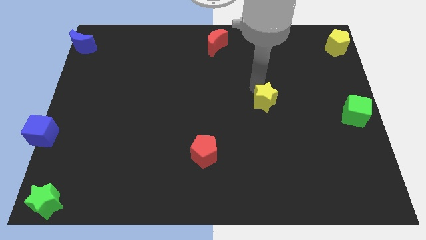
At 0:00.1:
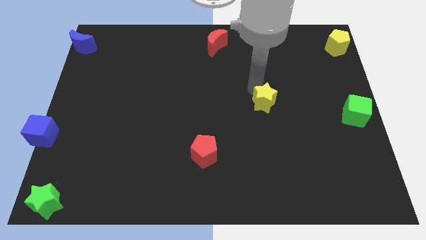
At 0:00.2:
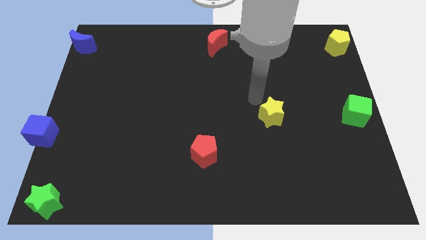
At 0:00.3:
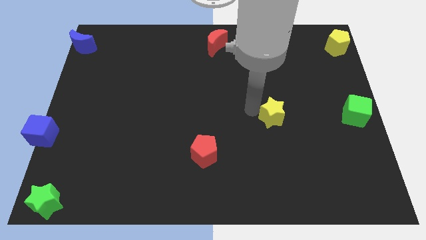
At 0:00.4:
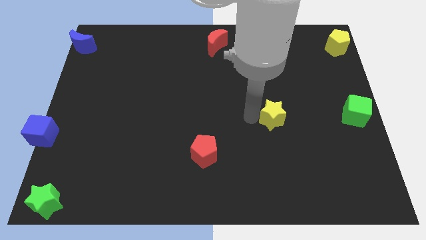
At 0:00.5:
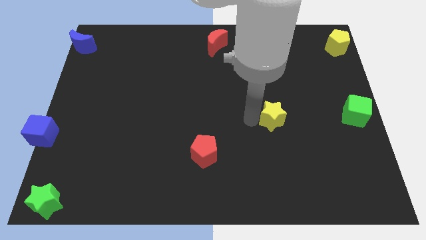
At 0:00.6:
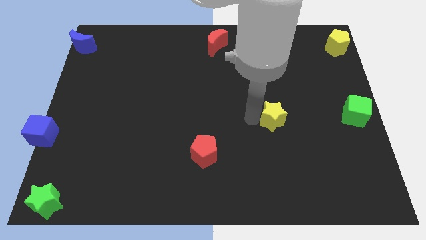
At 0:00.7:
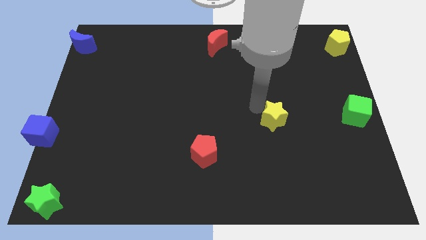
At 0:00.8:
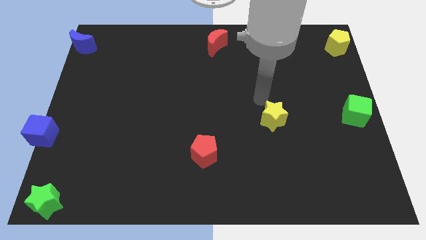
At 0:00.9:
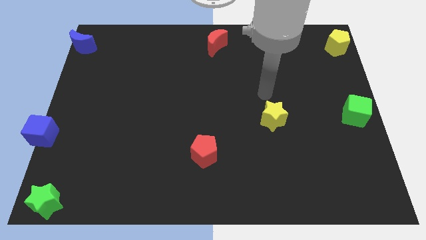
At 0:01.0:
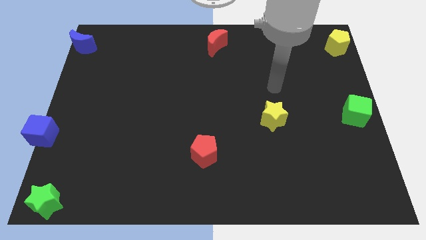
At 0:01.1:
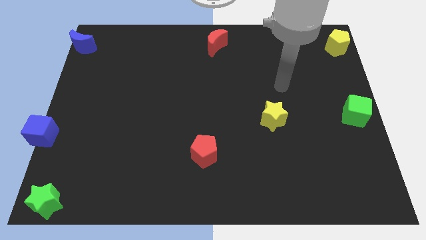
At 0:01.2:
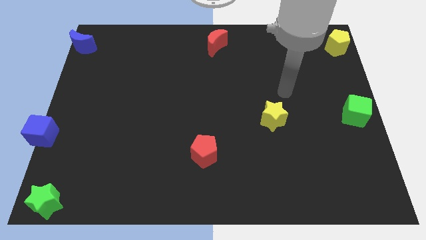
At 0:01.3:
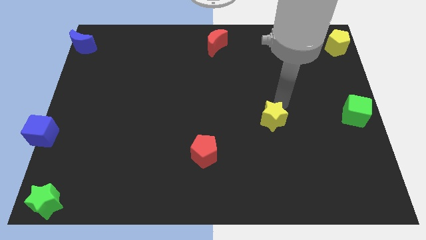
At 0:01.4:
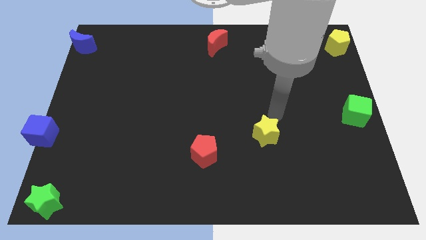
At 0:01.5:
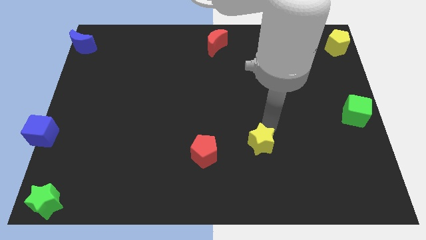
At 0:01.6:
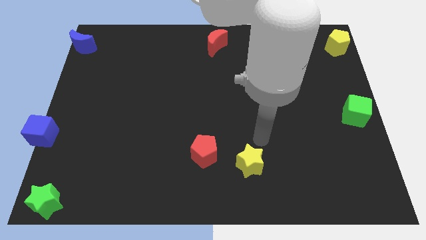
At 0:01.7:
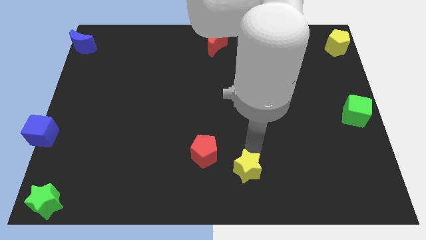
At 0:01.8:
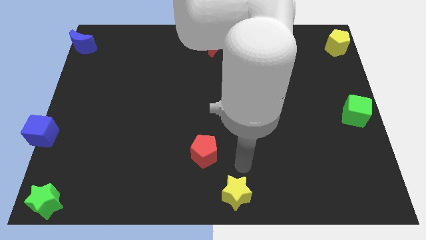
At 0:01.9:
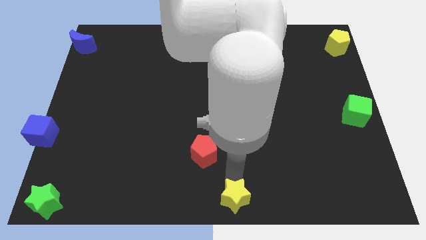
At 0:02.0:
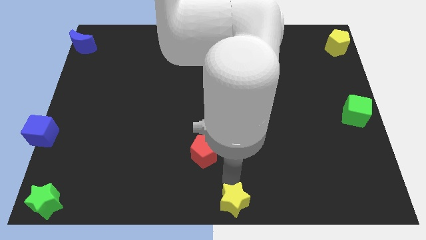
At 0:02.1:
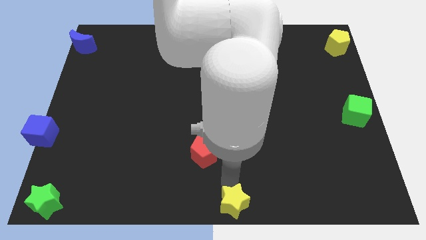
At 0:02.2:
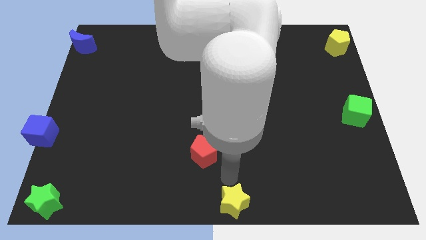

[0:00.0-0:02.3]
place the yellow star to the bottom center of the board

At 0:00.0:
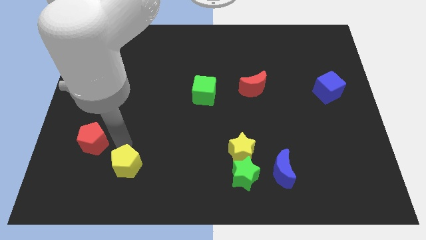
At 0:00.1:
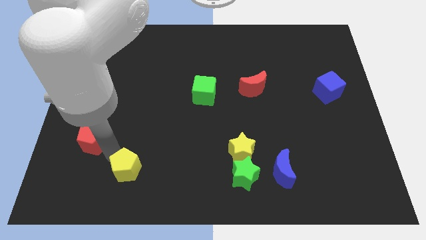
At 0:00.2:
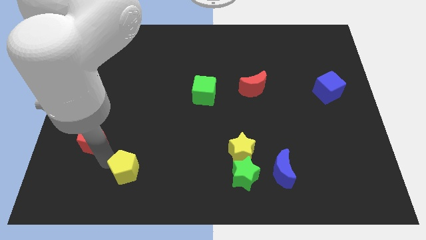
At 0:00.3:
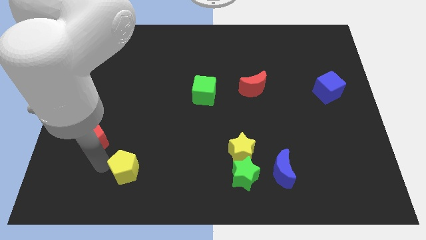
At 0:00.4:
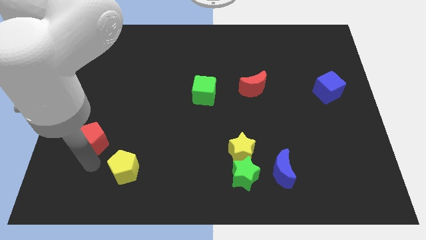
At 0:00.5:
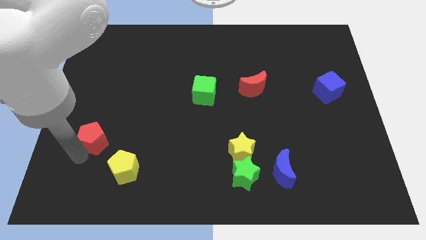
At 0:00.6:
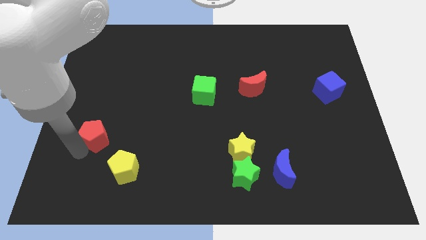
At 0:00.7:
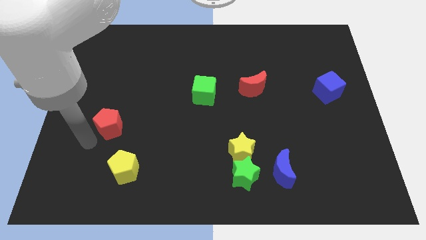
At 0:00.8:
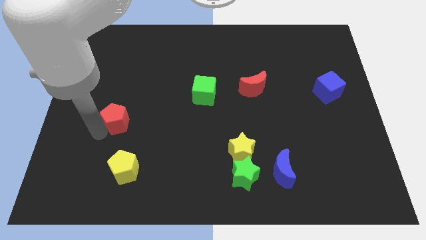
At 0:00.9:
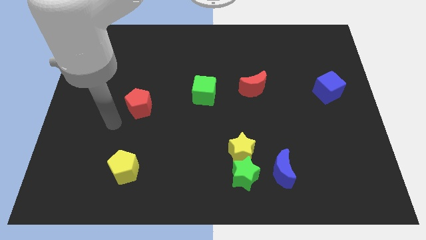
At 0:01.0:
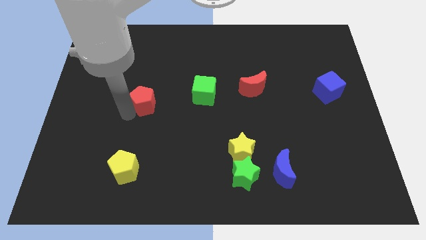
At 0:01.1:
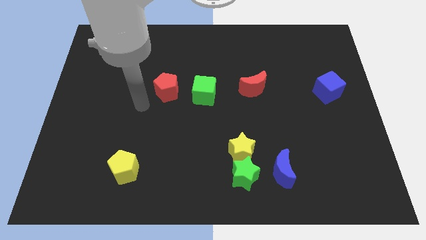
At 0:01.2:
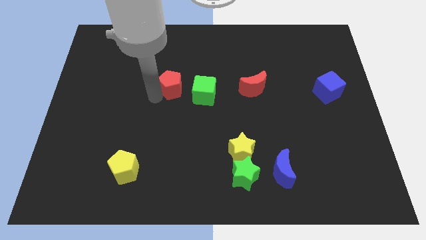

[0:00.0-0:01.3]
push red pentagon to the left of green cube

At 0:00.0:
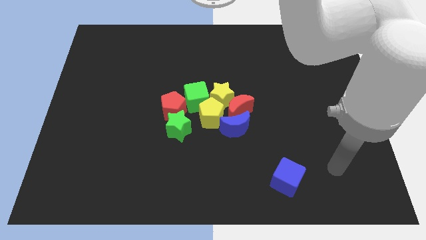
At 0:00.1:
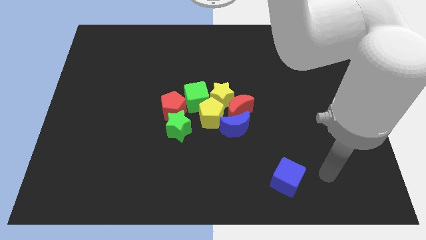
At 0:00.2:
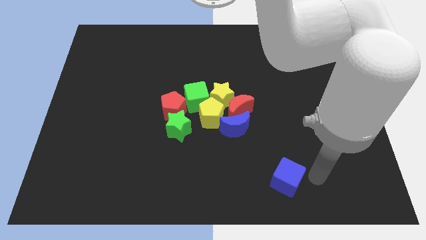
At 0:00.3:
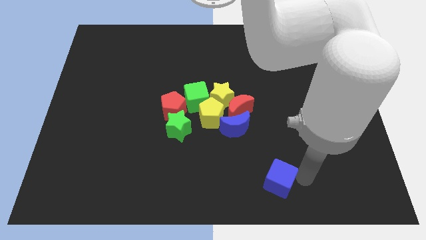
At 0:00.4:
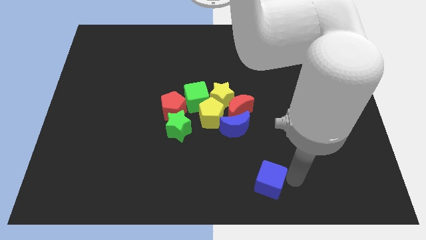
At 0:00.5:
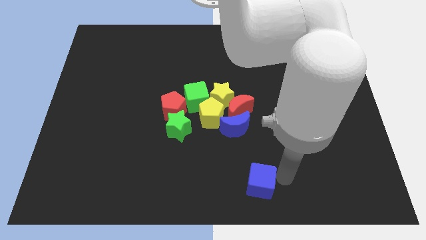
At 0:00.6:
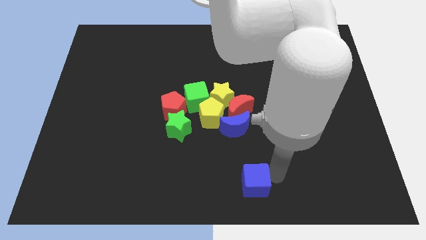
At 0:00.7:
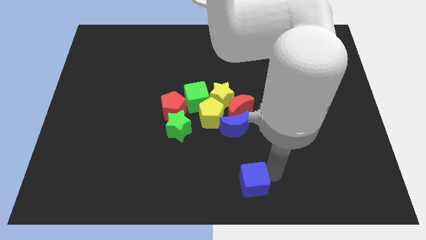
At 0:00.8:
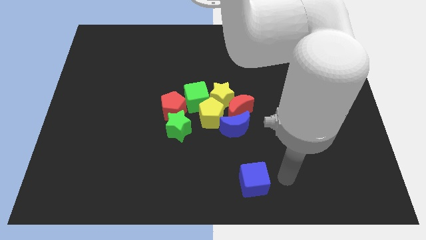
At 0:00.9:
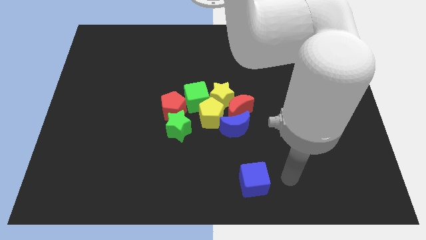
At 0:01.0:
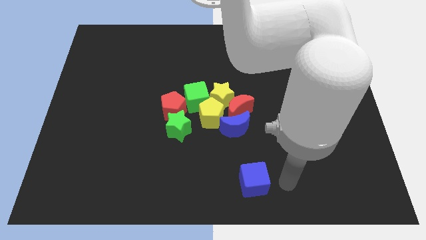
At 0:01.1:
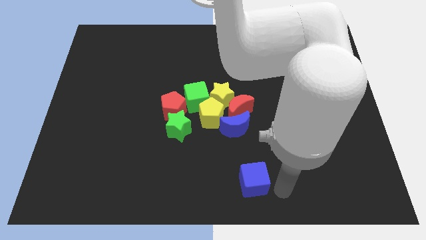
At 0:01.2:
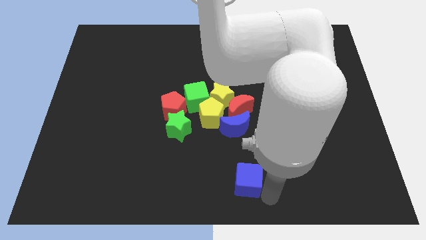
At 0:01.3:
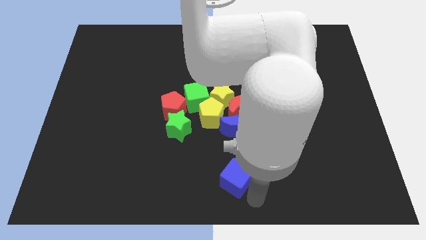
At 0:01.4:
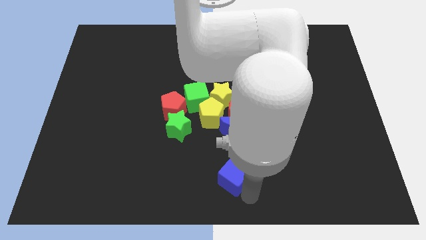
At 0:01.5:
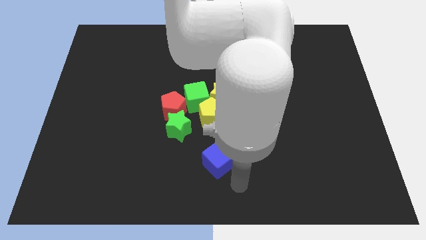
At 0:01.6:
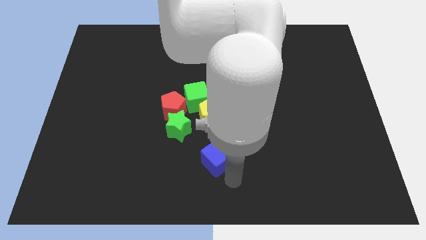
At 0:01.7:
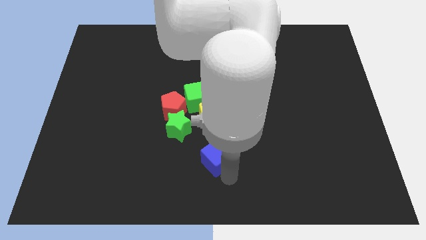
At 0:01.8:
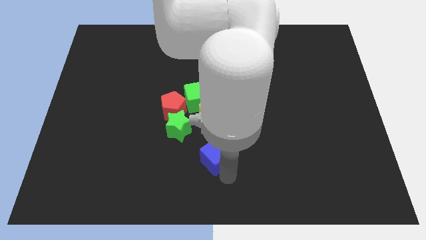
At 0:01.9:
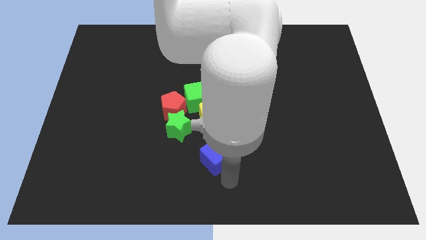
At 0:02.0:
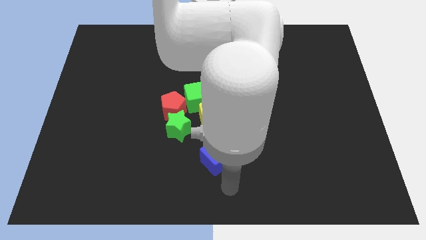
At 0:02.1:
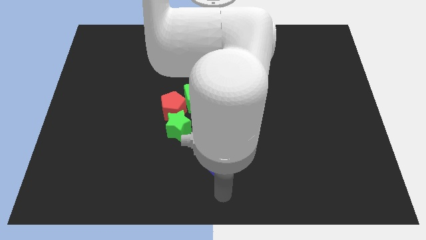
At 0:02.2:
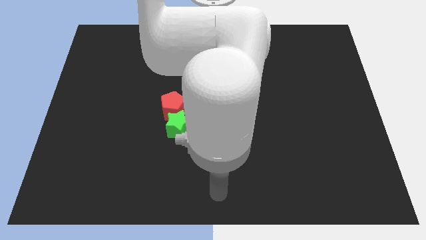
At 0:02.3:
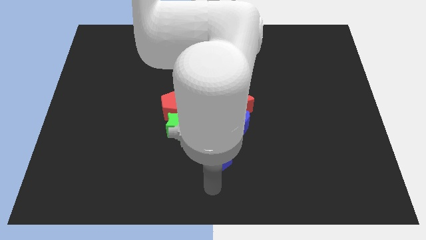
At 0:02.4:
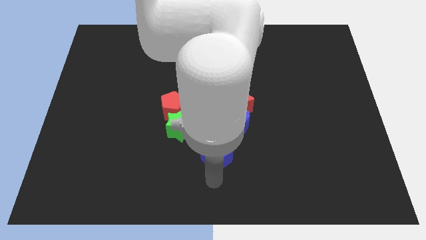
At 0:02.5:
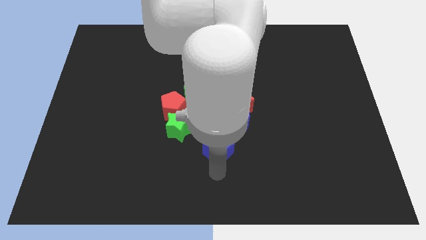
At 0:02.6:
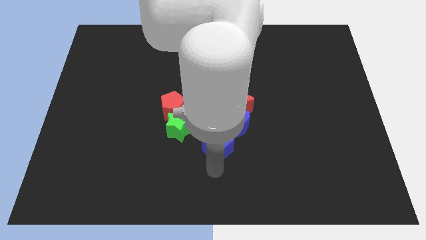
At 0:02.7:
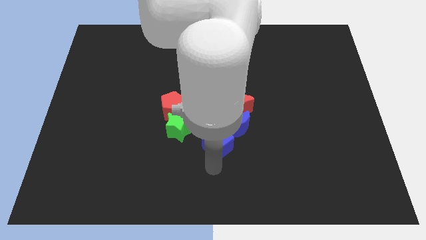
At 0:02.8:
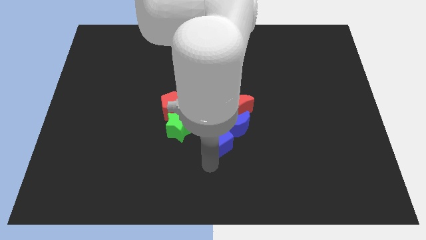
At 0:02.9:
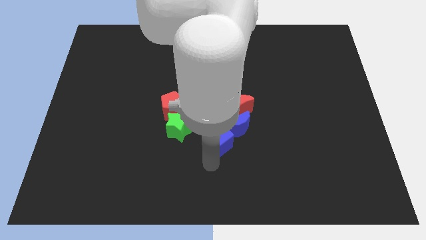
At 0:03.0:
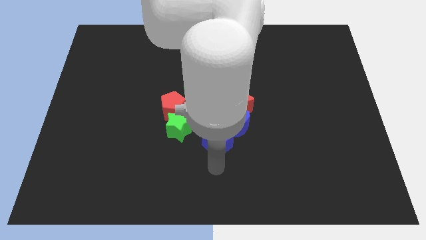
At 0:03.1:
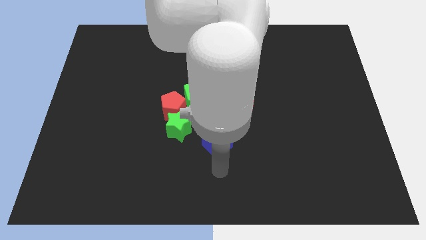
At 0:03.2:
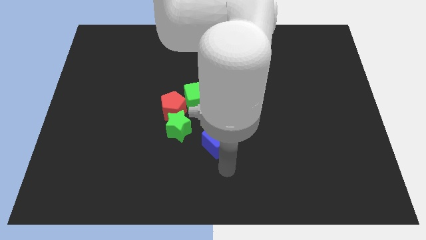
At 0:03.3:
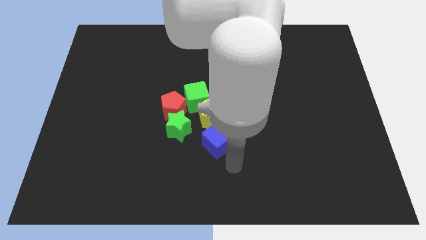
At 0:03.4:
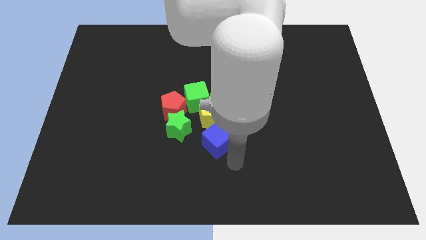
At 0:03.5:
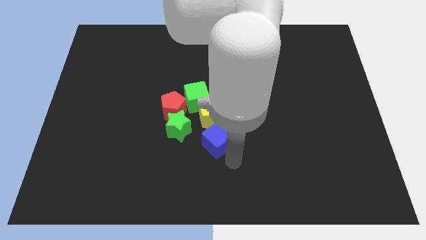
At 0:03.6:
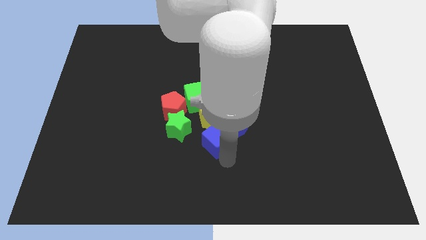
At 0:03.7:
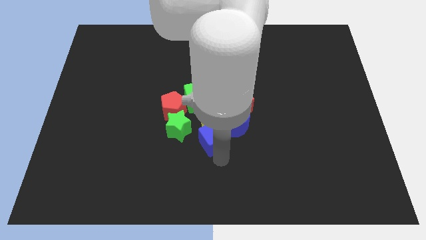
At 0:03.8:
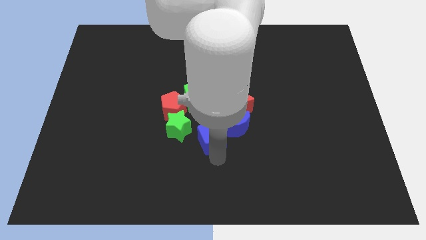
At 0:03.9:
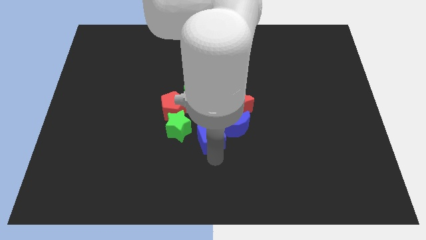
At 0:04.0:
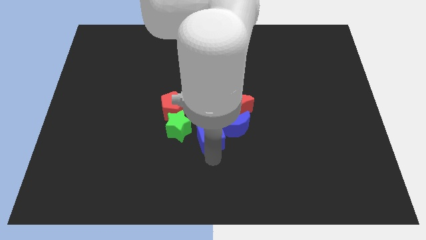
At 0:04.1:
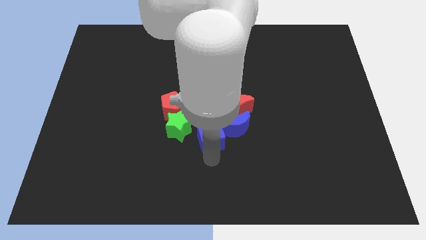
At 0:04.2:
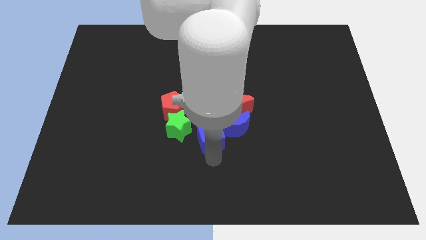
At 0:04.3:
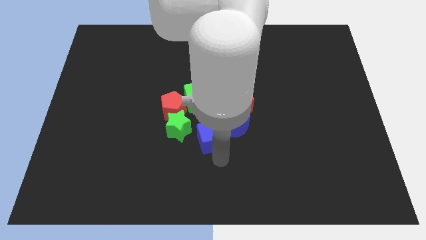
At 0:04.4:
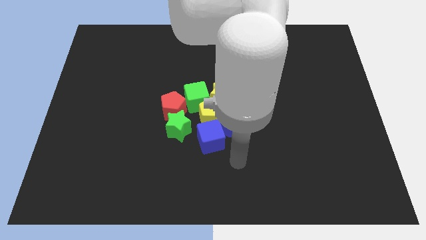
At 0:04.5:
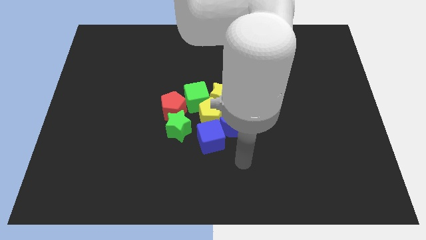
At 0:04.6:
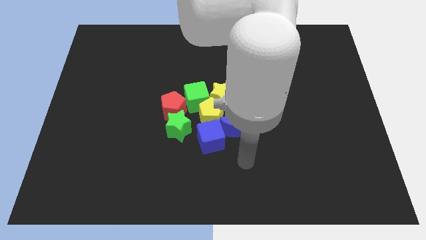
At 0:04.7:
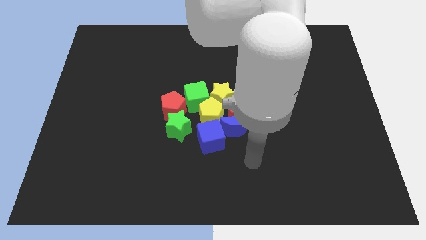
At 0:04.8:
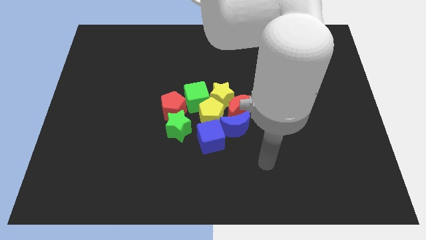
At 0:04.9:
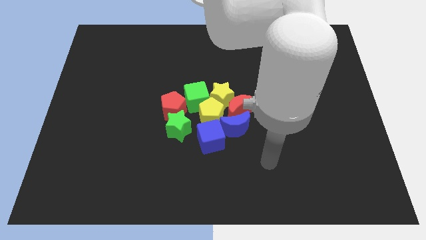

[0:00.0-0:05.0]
push the blue cube into the group of blocks

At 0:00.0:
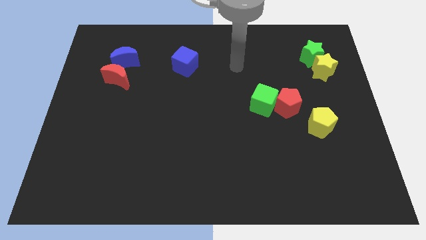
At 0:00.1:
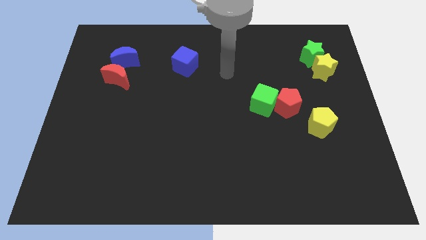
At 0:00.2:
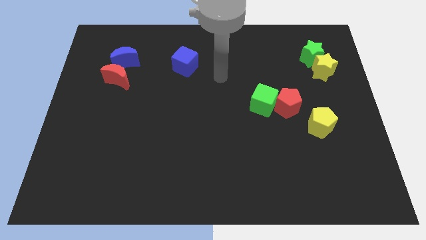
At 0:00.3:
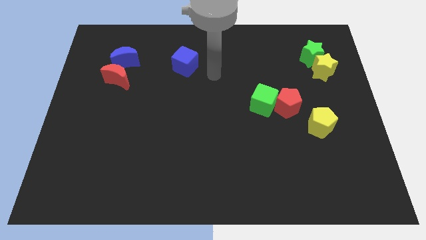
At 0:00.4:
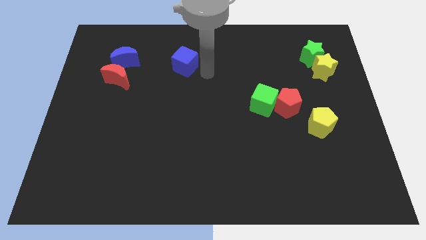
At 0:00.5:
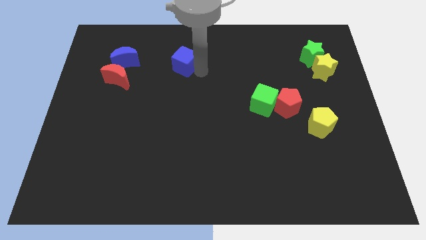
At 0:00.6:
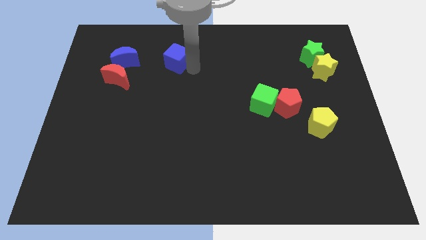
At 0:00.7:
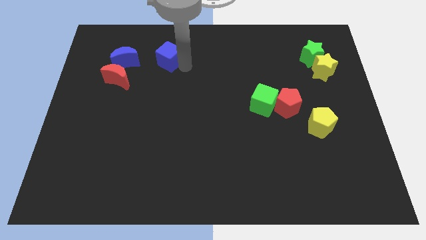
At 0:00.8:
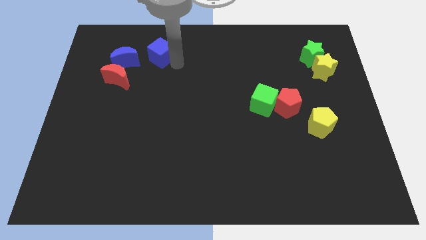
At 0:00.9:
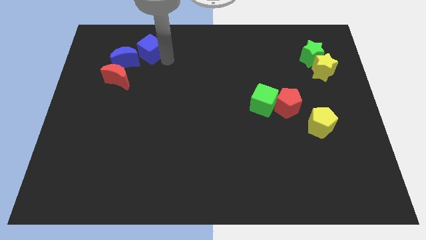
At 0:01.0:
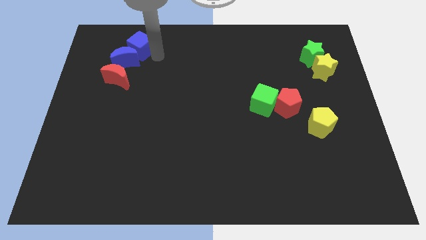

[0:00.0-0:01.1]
push the blue cube towards the top of the blue moon
